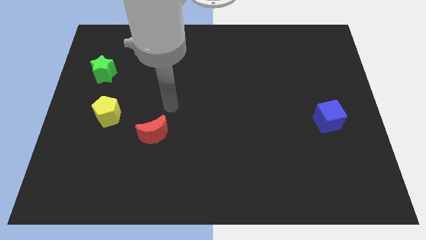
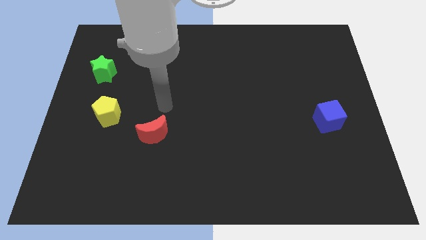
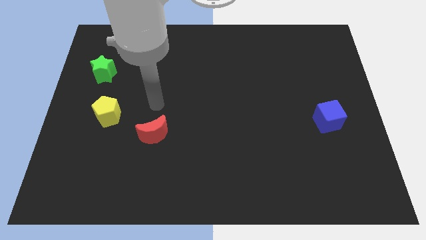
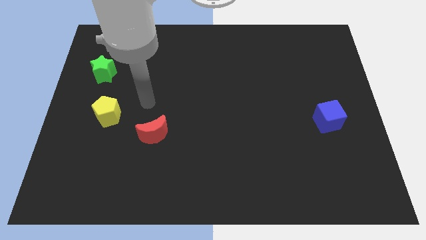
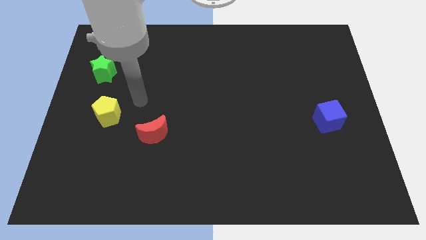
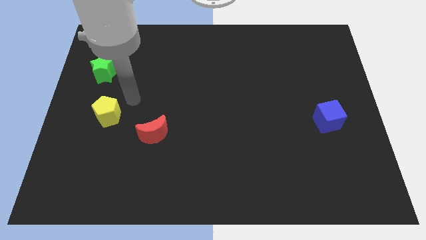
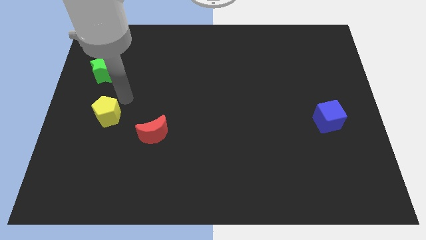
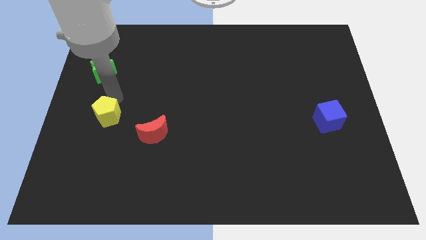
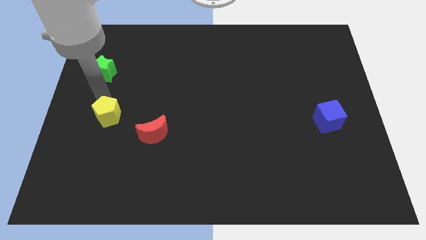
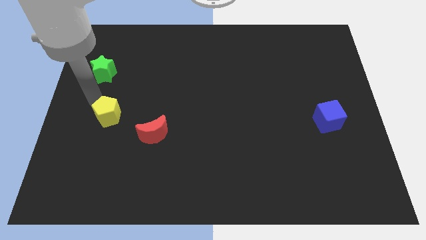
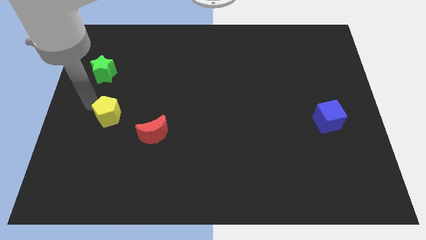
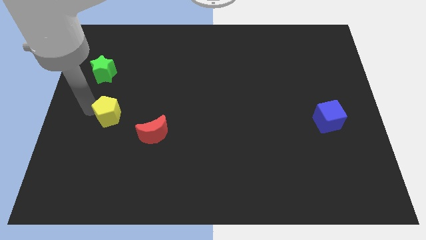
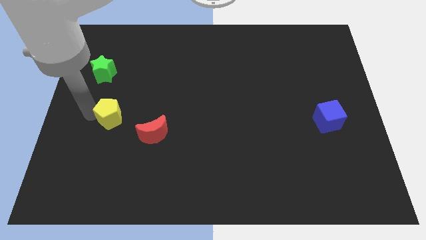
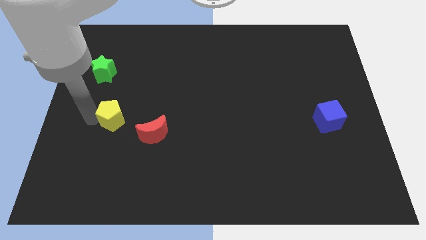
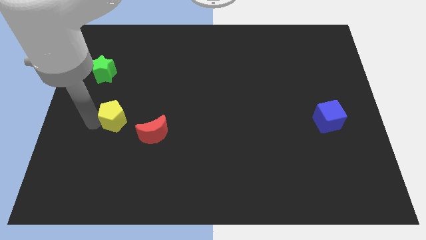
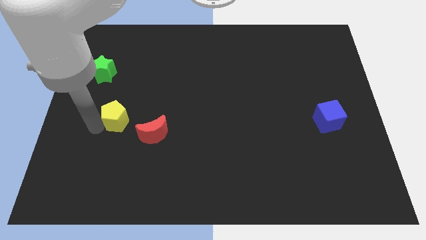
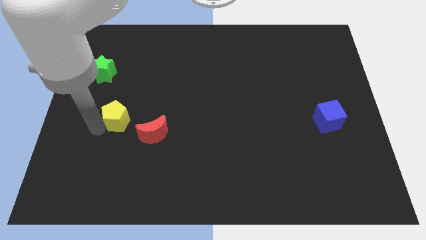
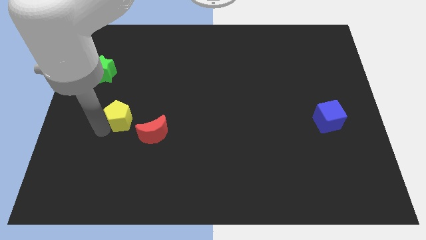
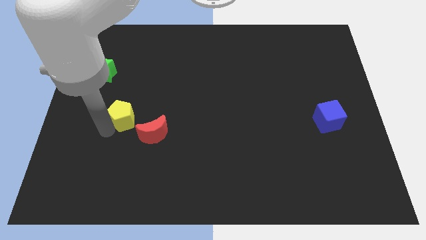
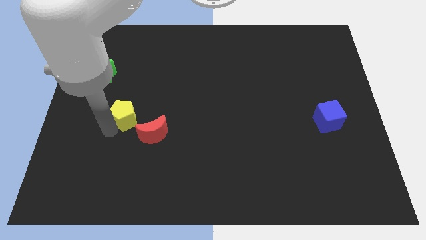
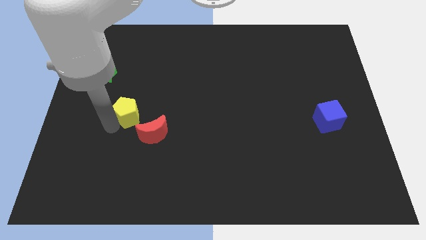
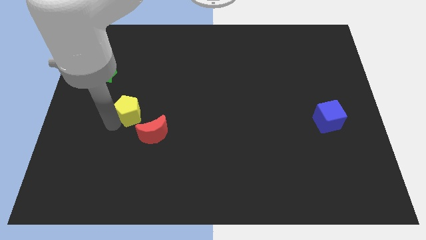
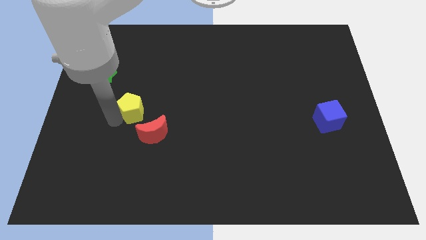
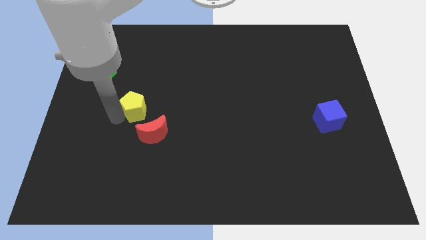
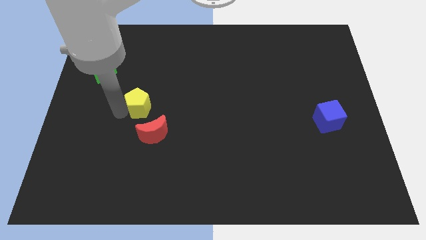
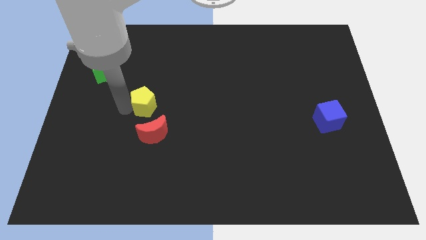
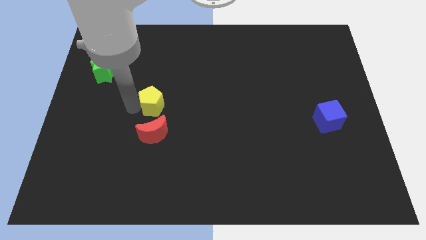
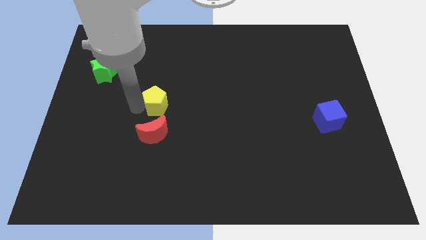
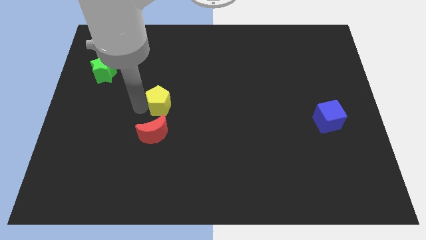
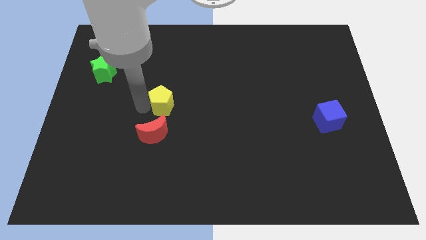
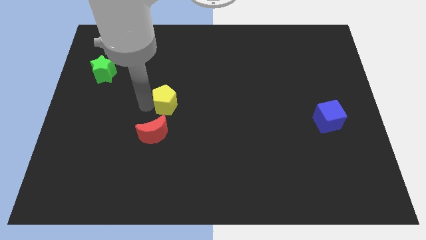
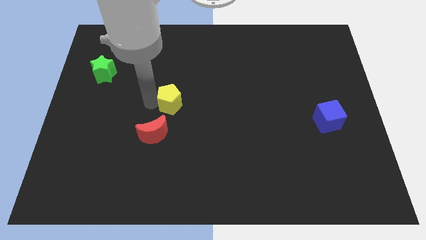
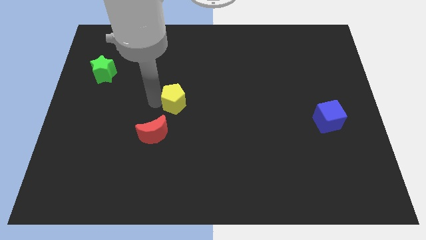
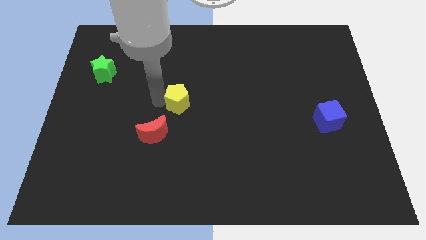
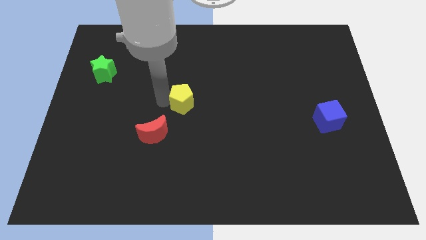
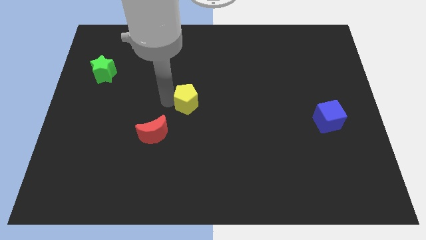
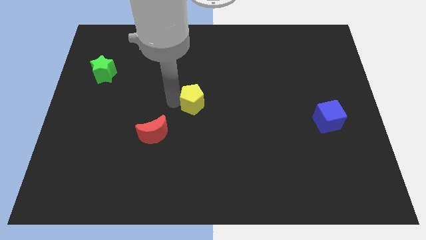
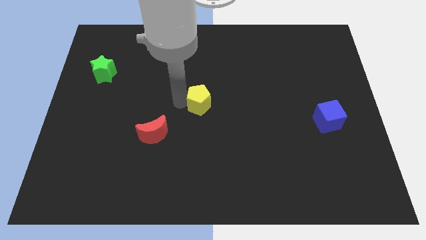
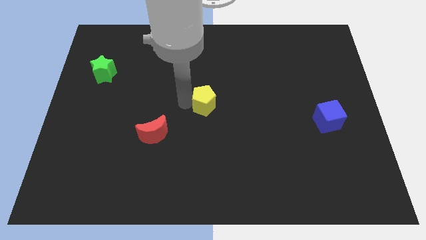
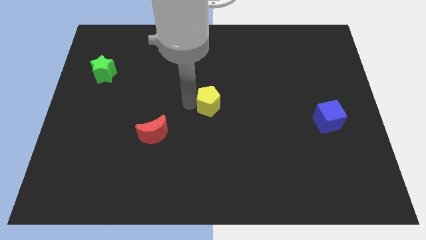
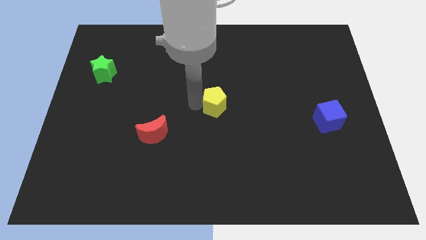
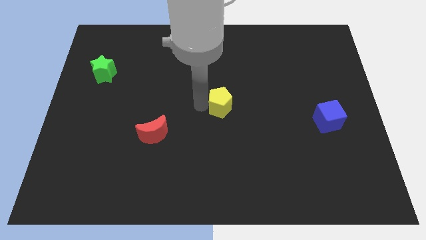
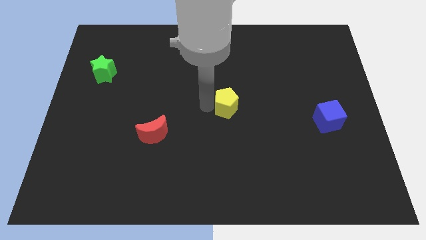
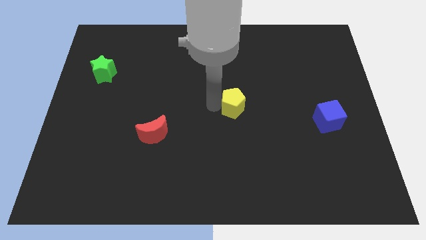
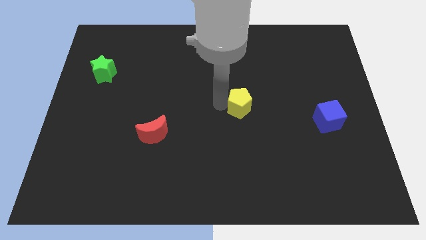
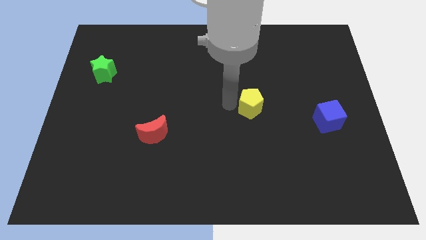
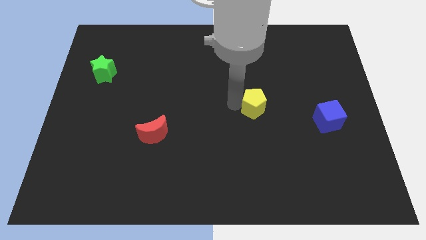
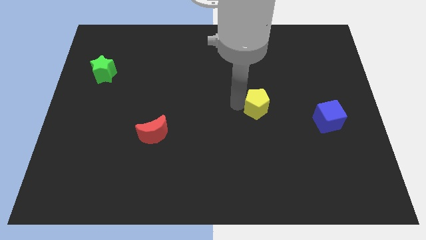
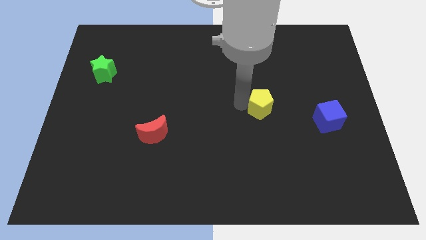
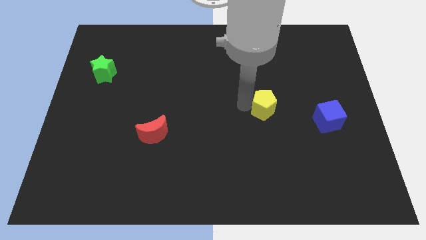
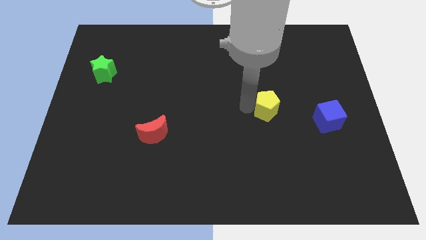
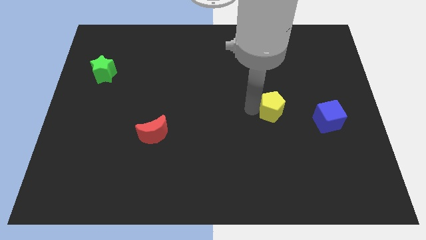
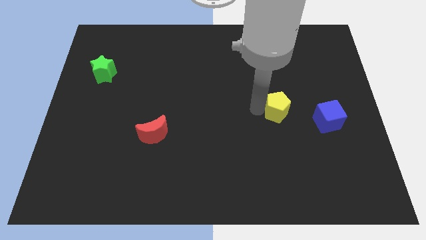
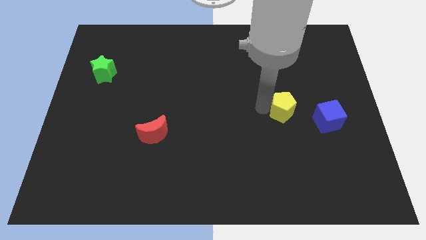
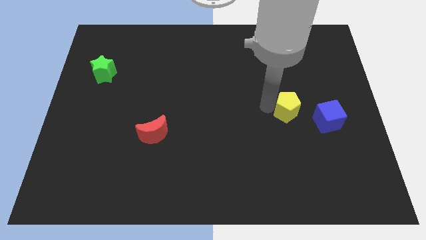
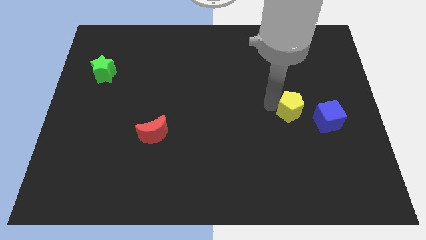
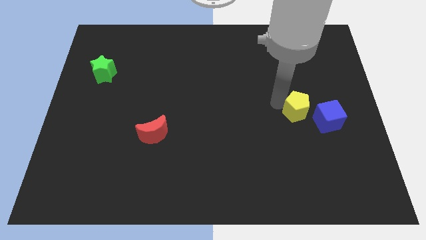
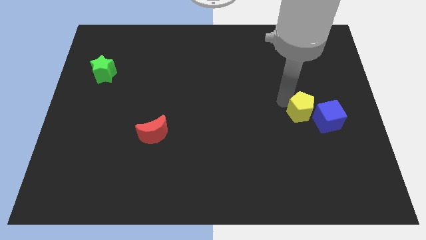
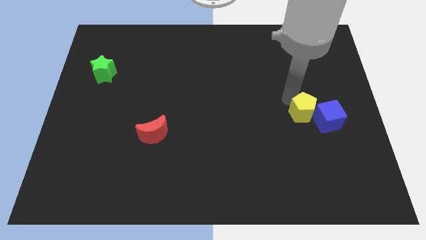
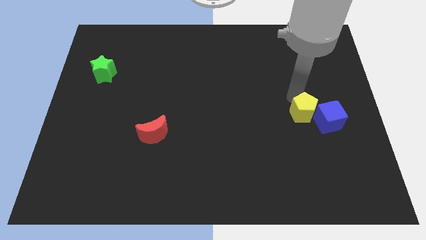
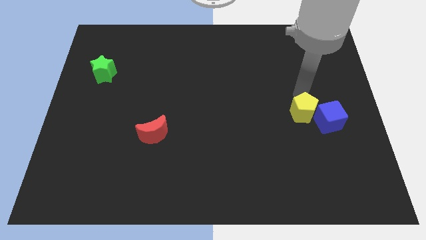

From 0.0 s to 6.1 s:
put the pentagon towards the blue block

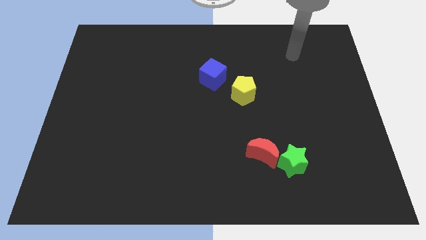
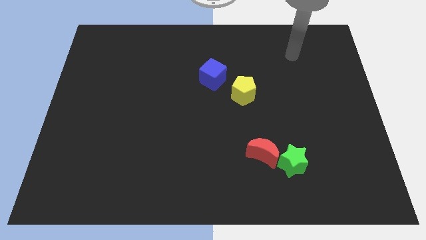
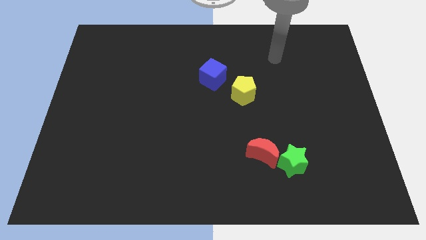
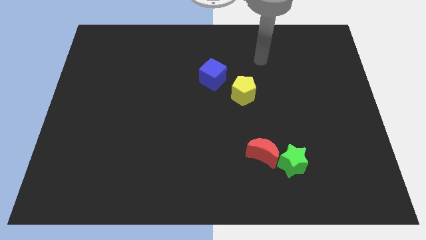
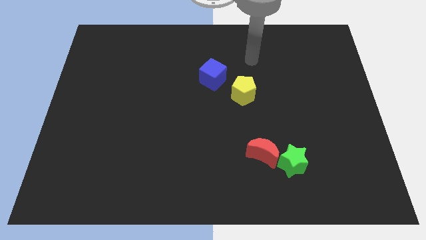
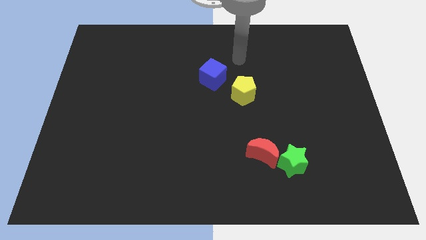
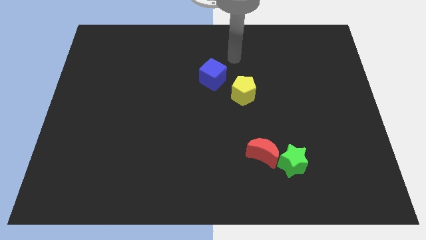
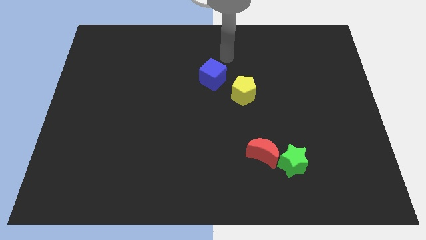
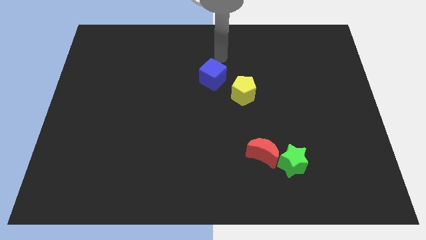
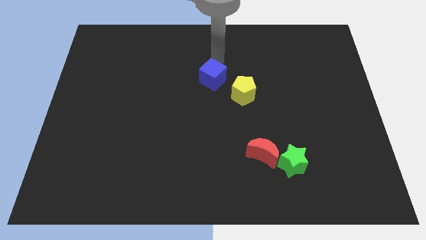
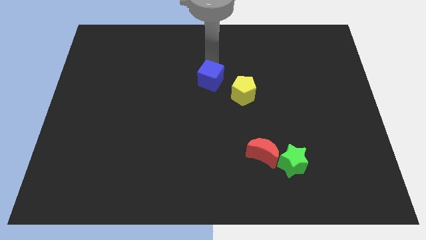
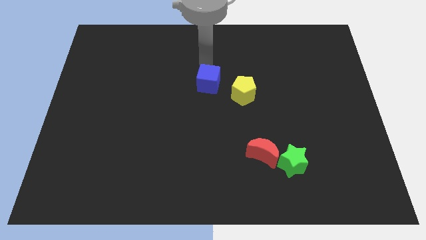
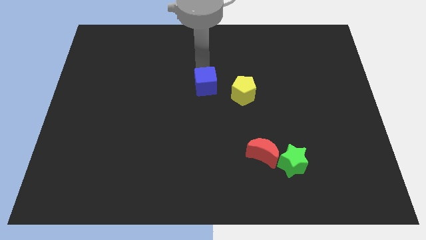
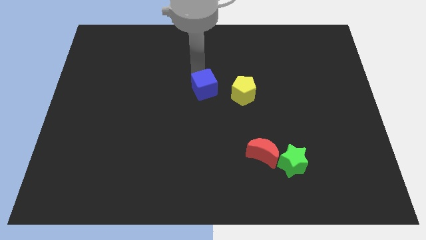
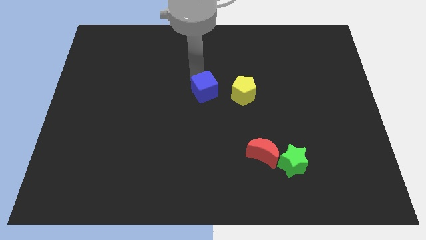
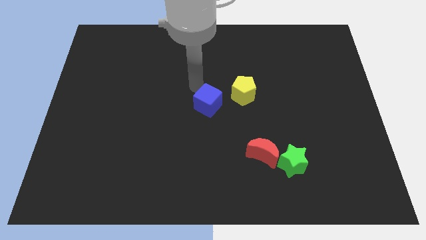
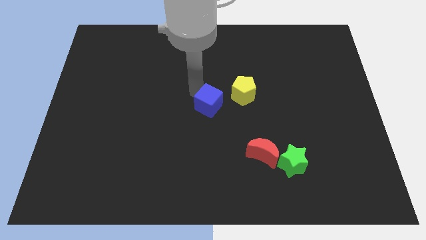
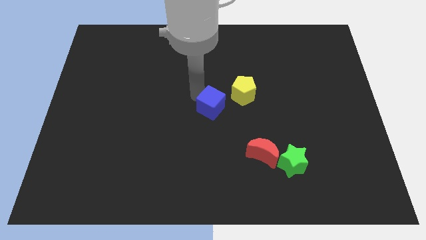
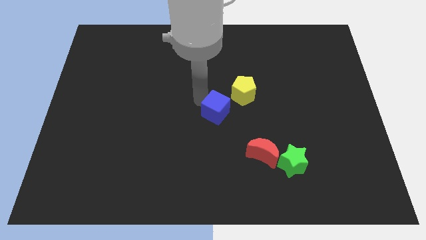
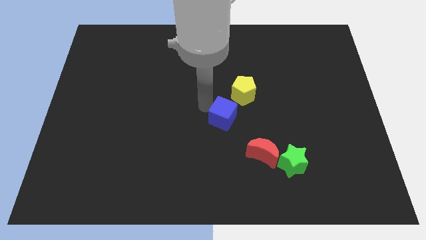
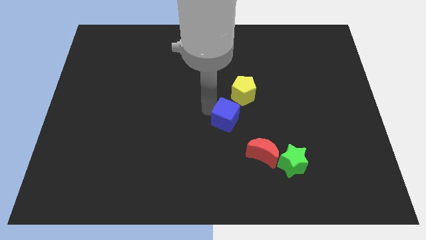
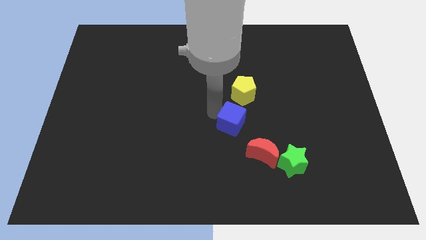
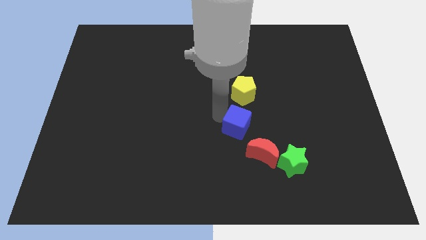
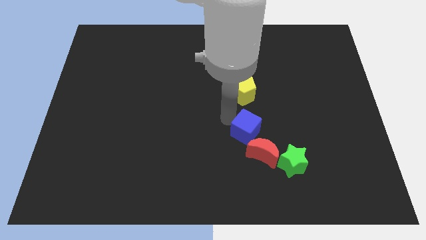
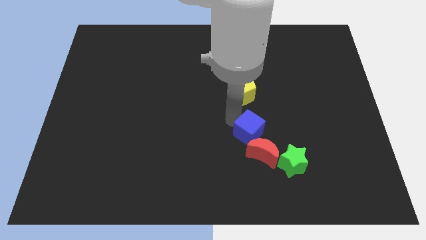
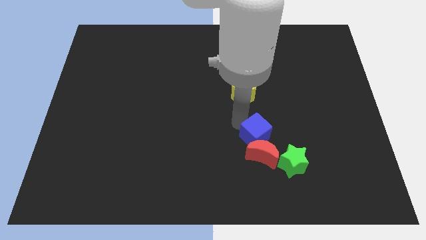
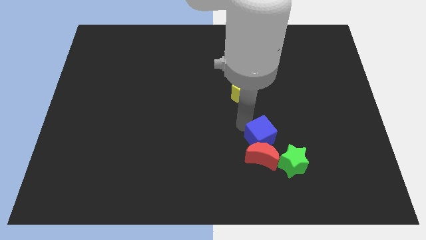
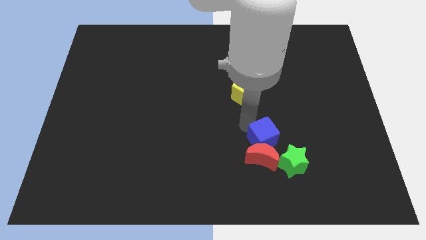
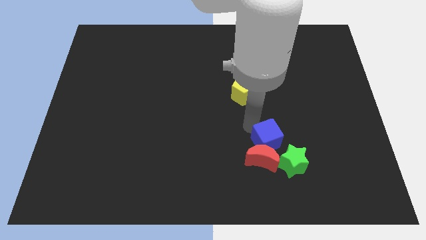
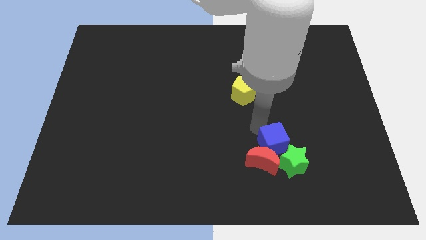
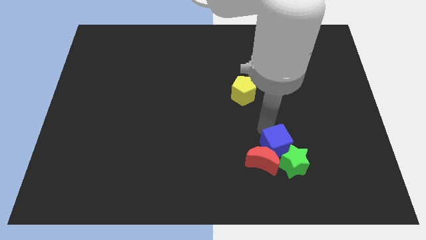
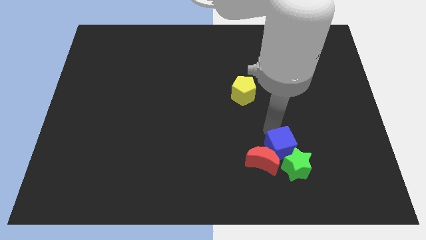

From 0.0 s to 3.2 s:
put the blue block to the green block
